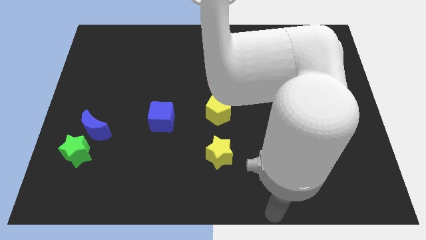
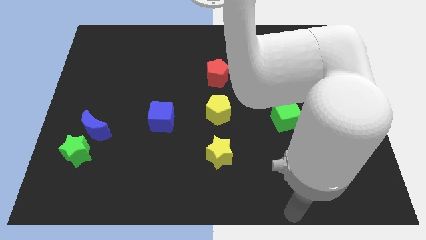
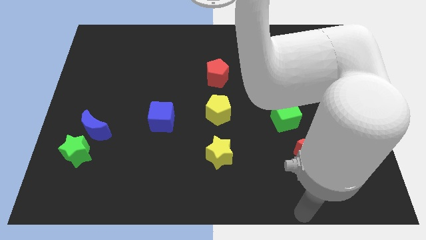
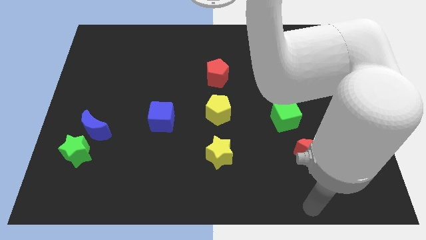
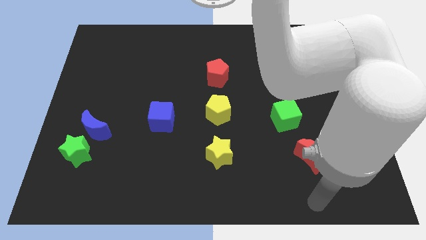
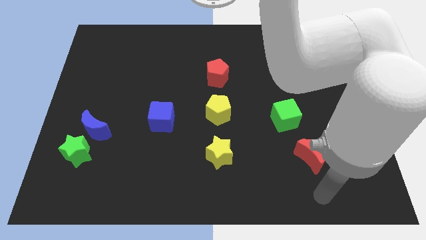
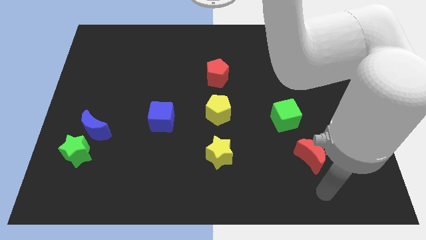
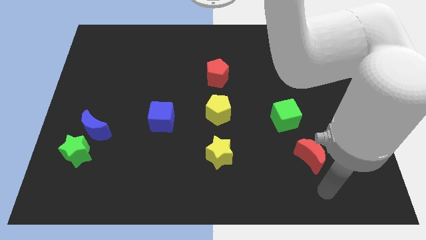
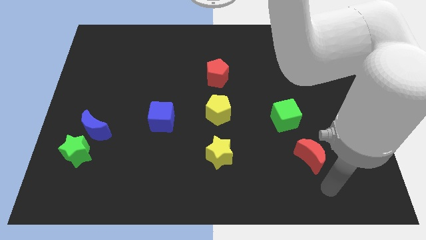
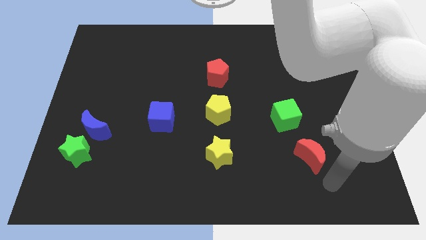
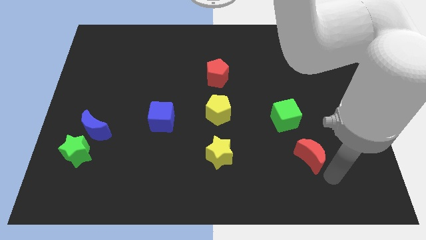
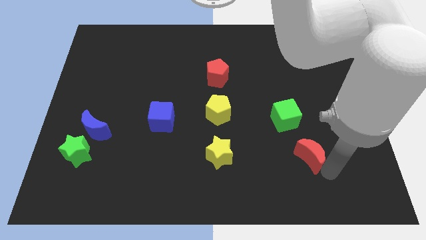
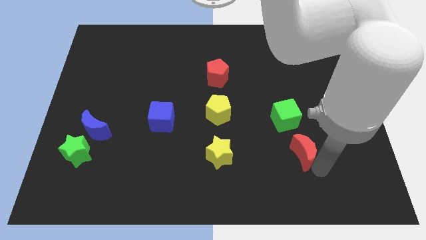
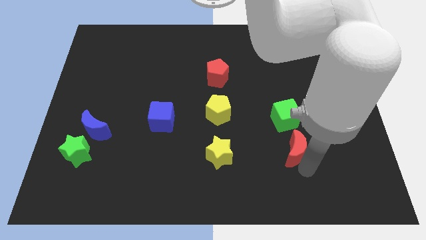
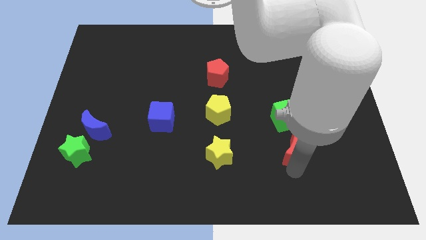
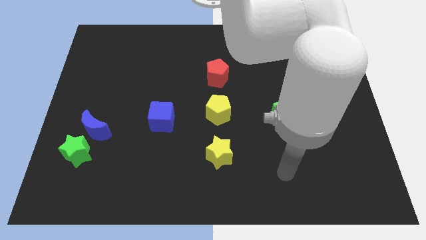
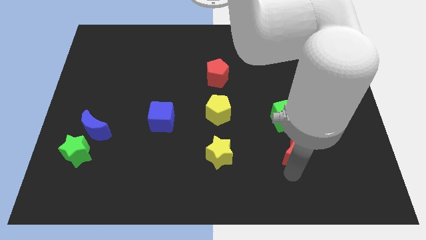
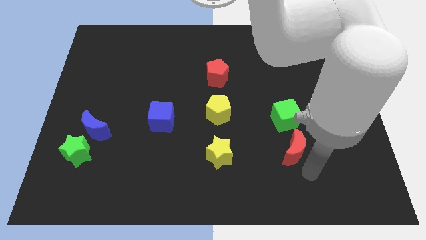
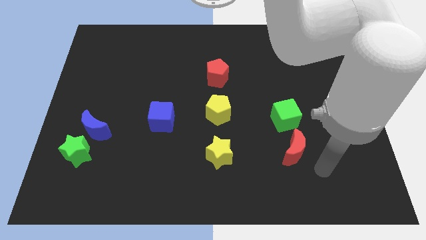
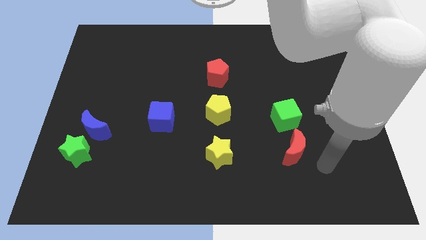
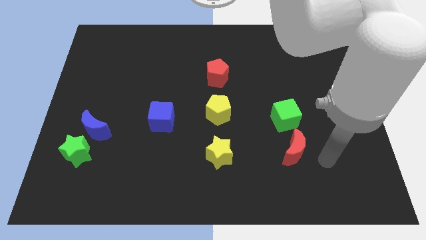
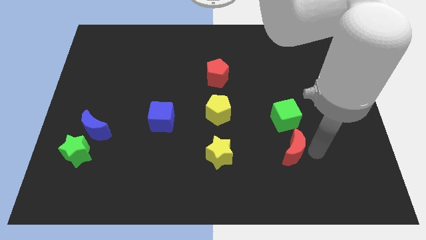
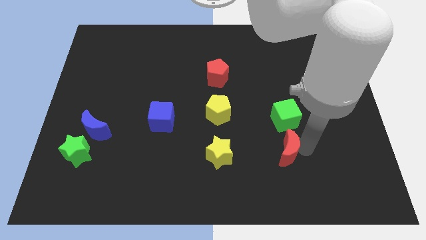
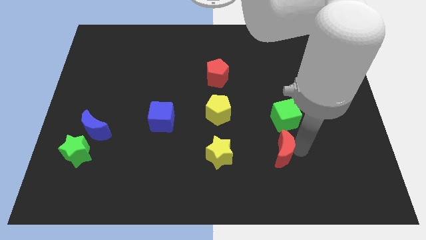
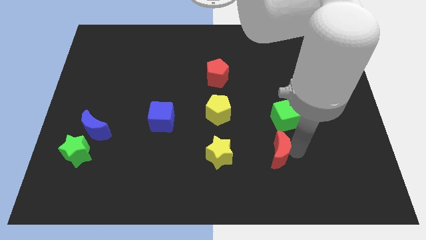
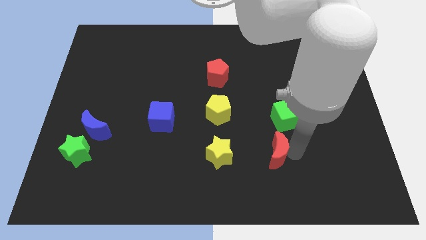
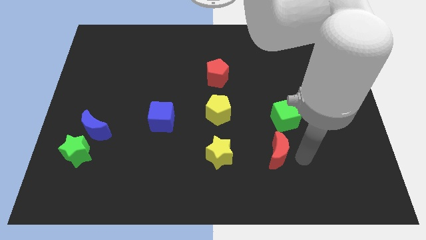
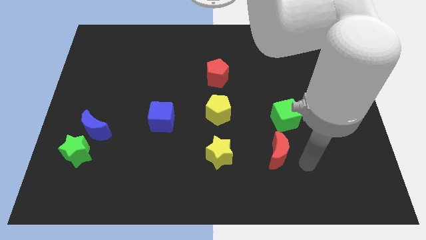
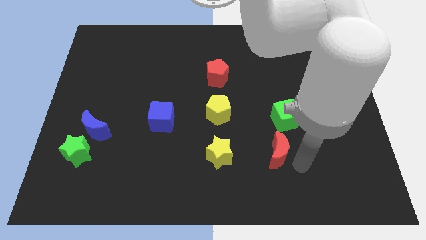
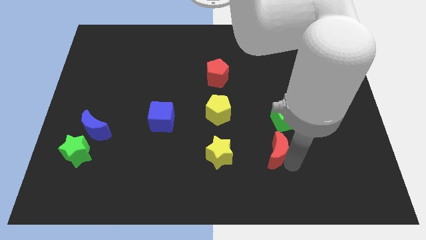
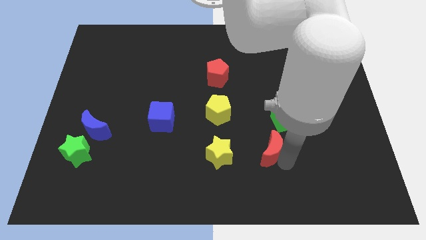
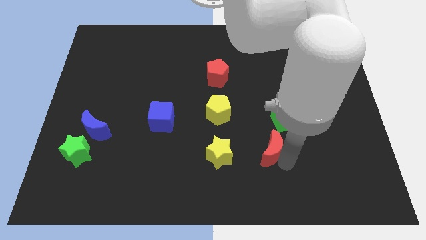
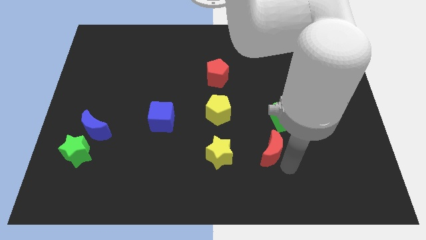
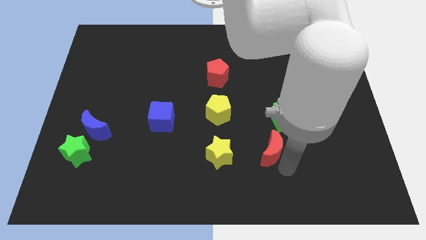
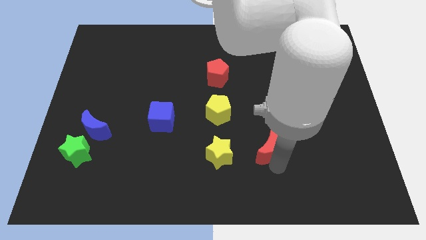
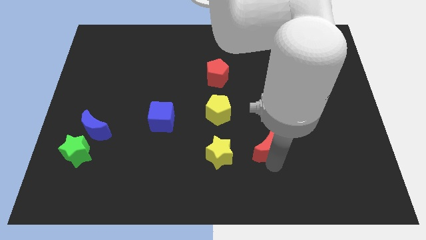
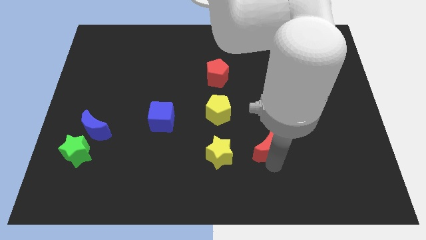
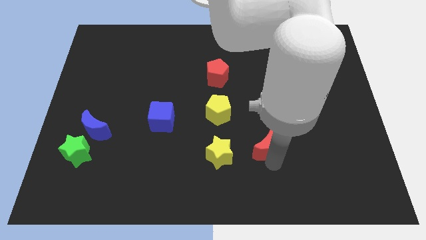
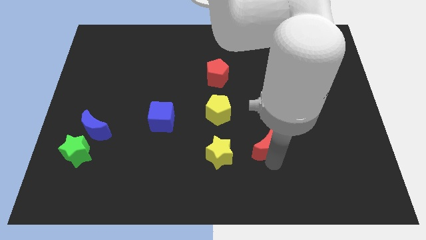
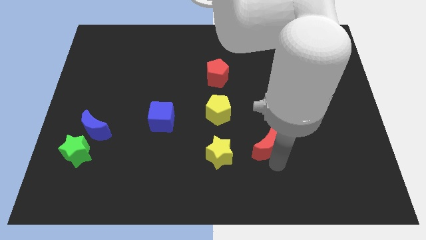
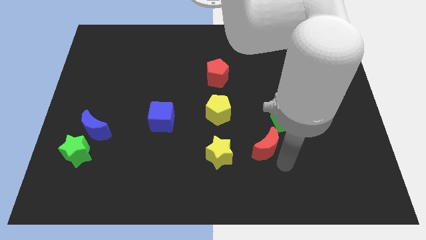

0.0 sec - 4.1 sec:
place red moon to the right of yellow star

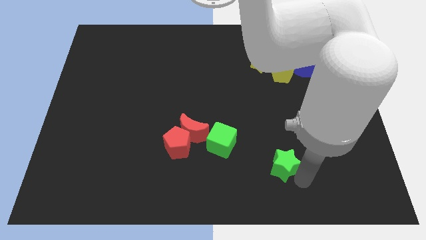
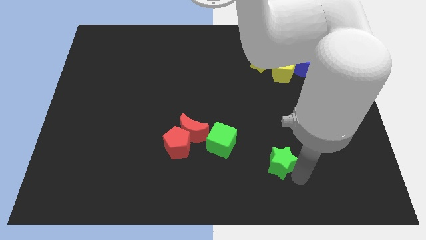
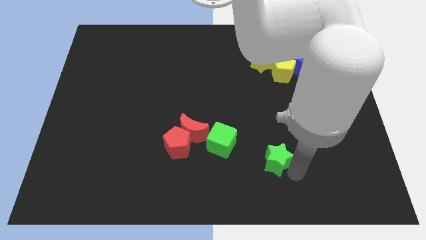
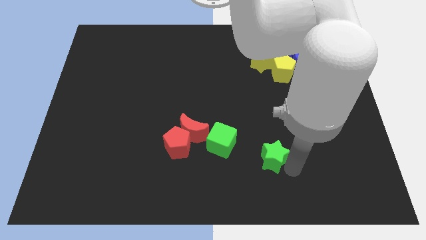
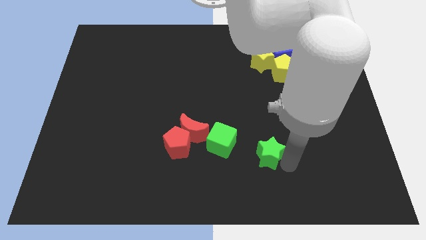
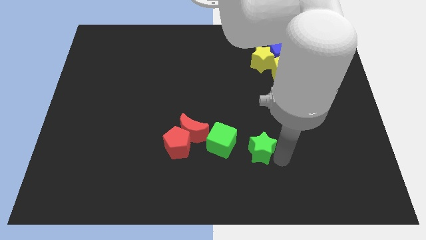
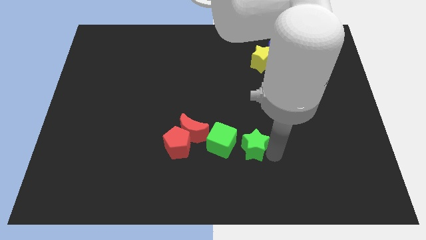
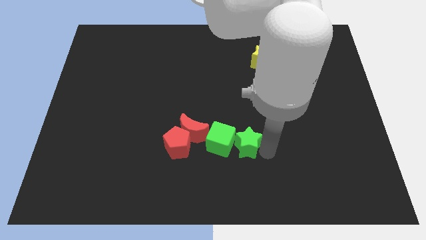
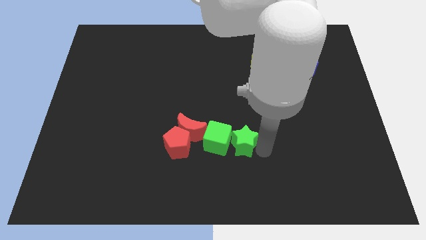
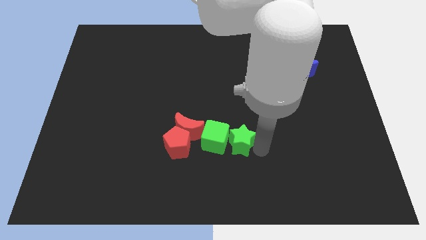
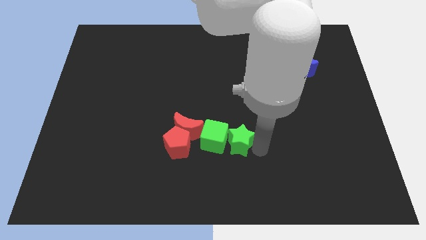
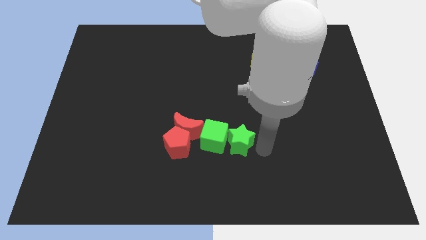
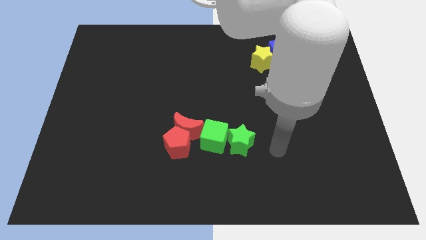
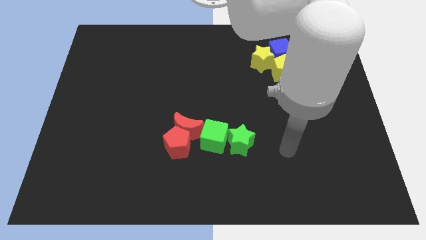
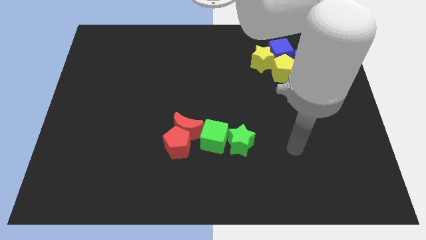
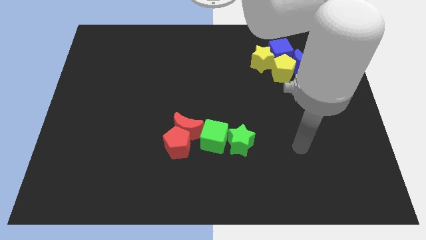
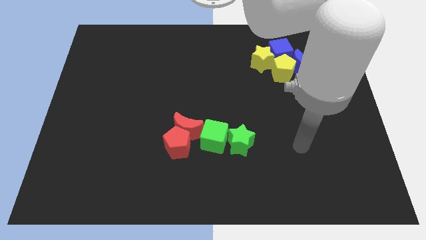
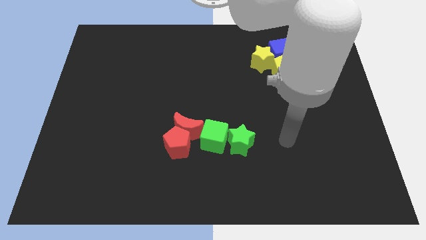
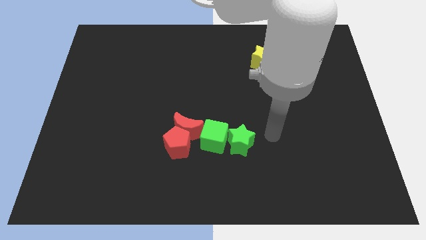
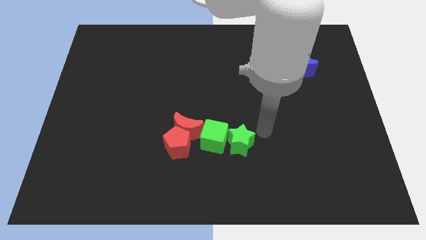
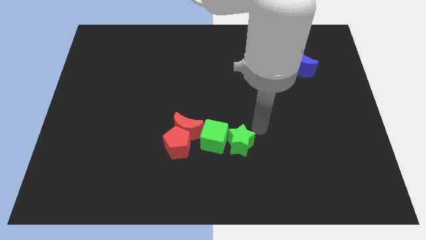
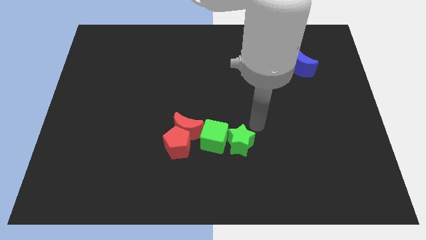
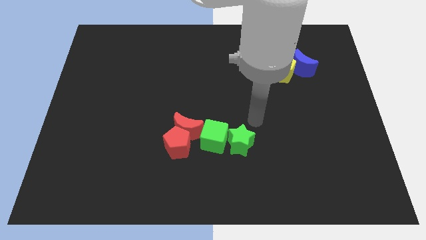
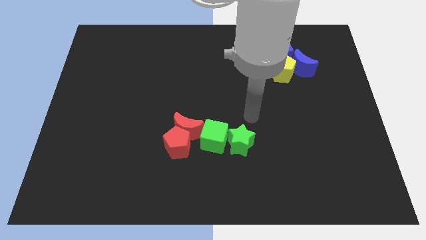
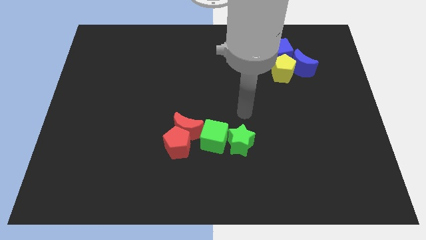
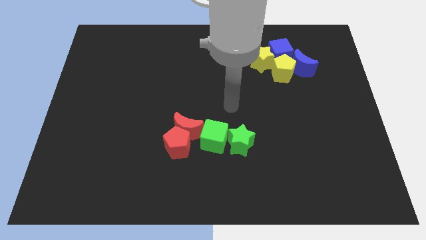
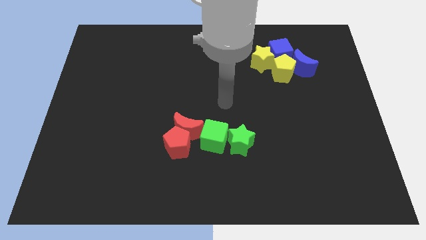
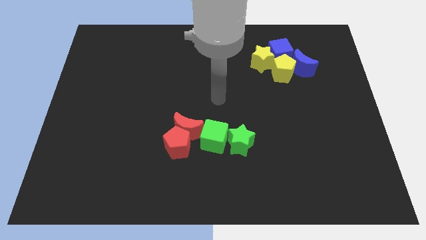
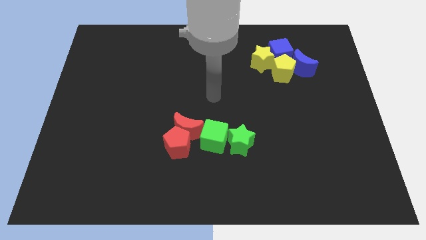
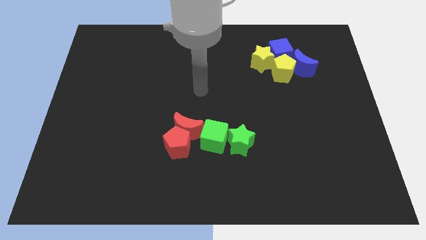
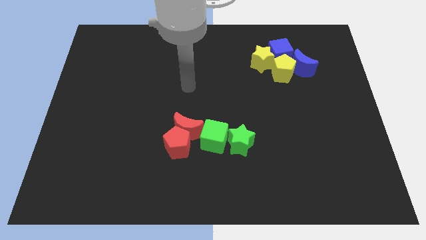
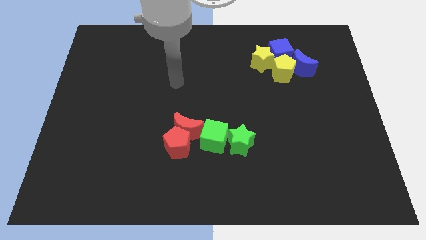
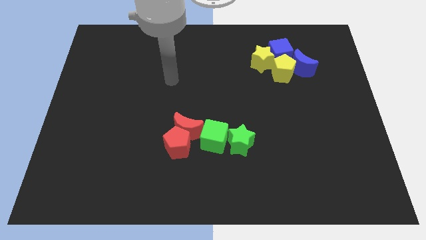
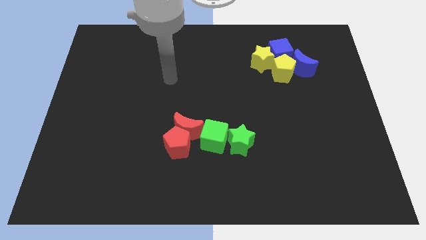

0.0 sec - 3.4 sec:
push the green star into the green cube

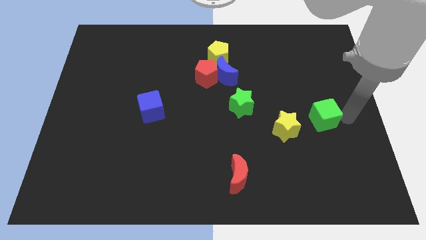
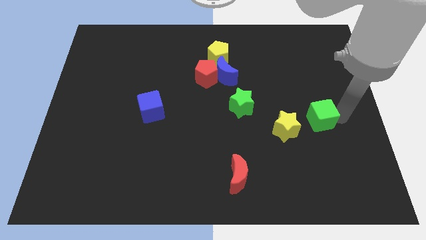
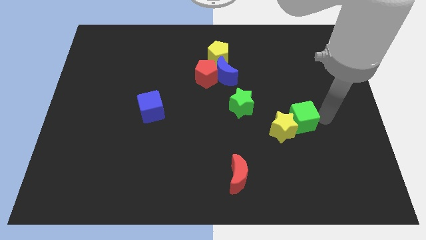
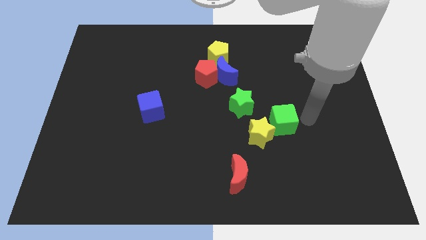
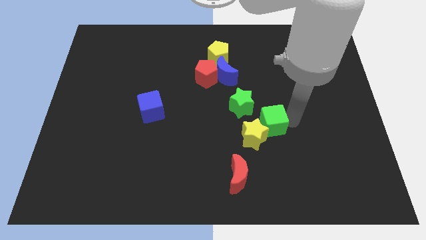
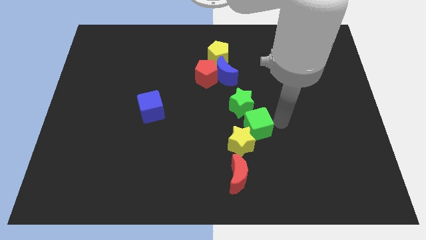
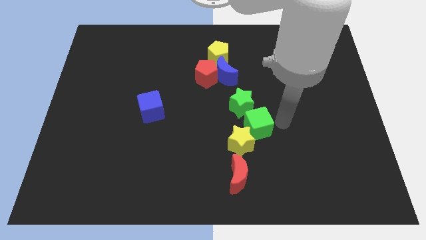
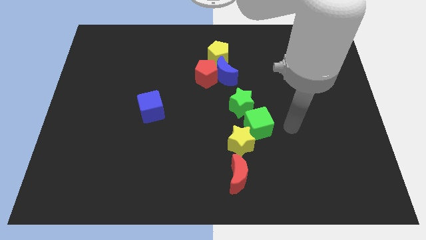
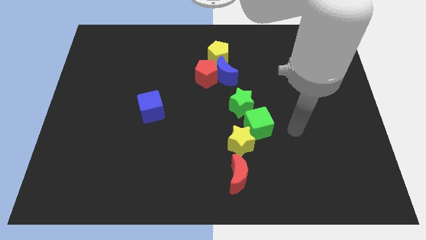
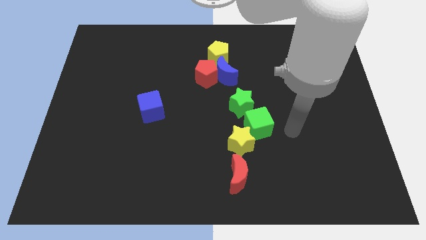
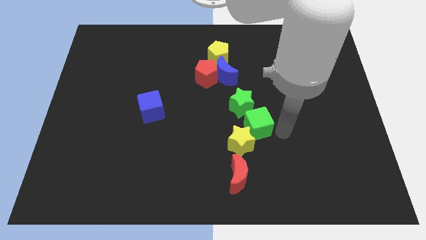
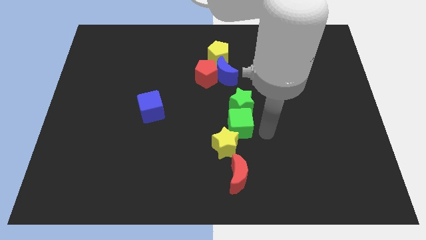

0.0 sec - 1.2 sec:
move green cube along with the yellow star to the bottom of green star

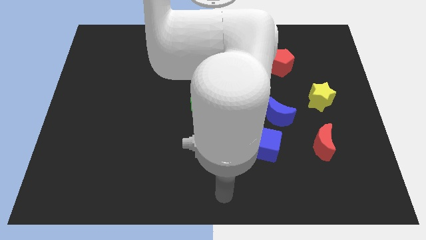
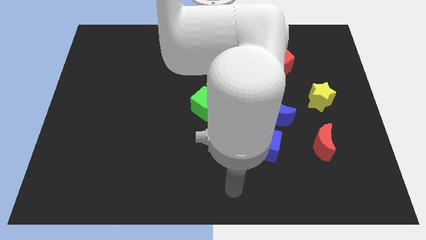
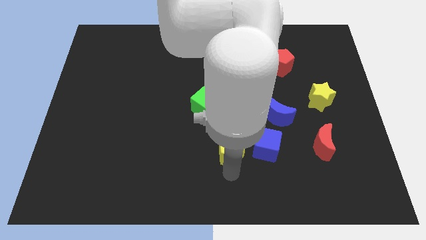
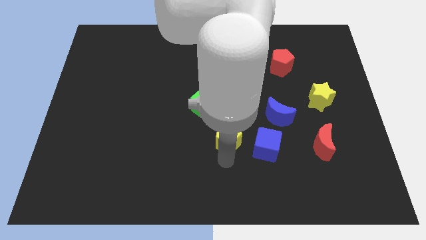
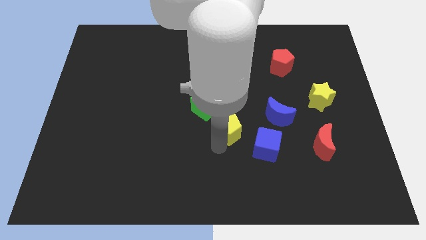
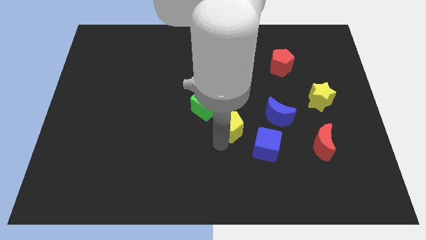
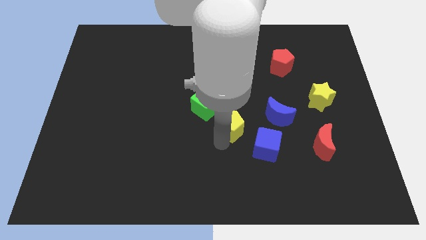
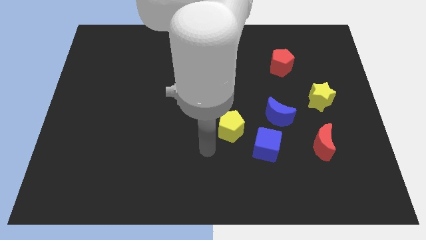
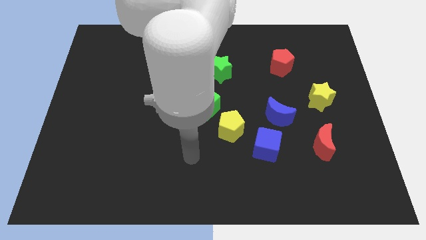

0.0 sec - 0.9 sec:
place the yellow pentagon diagonal to the green cube
